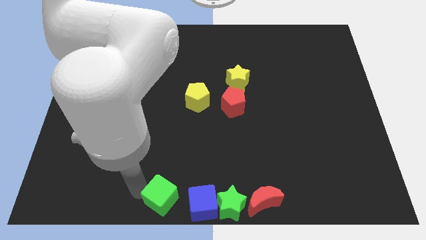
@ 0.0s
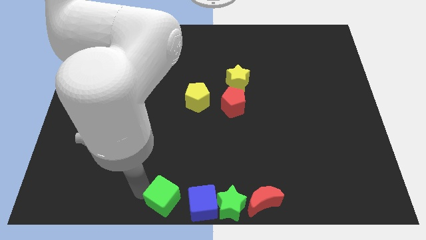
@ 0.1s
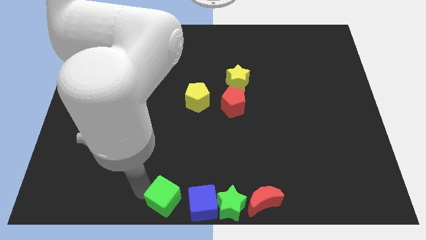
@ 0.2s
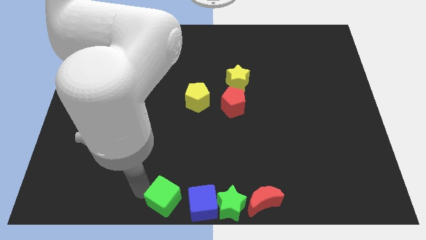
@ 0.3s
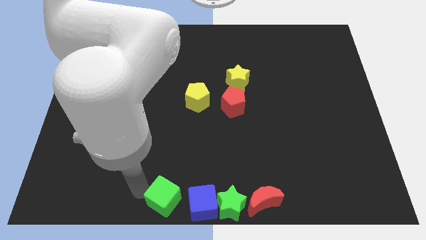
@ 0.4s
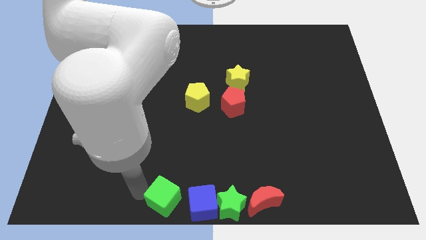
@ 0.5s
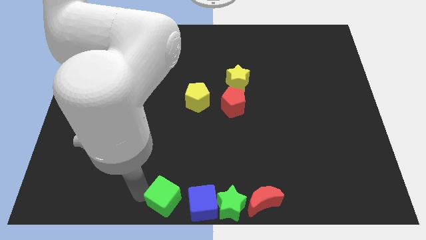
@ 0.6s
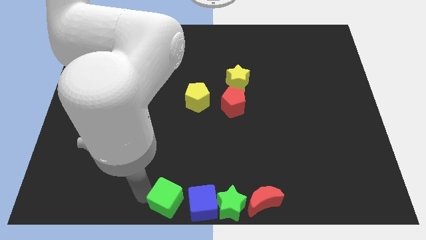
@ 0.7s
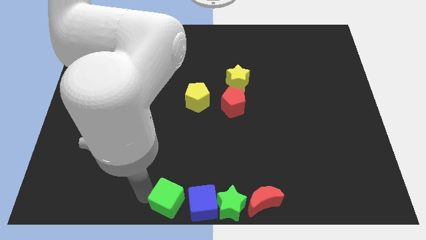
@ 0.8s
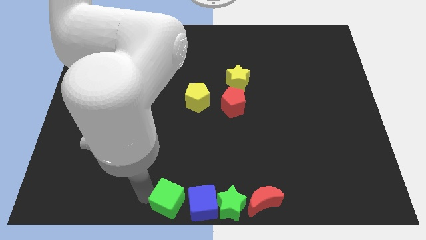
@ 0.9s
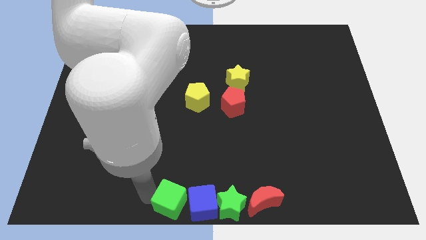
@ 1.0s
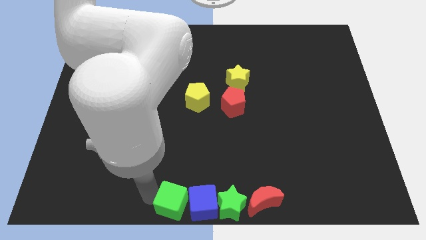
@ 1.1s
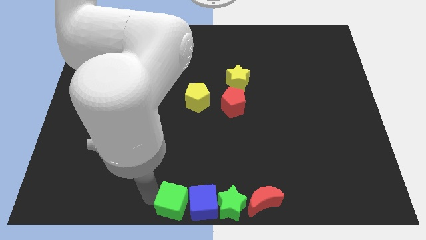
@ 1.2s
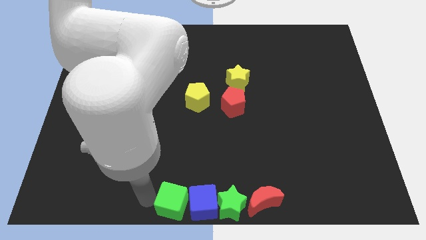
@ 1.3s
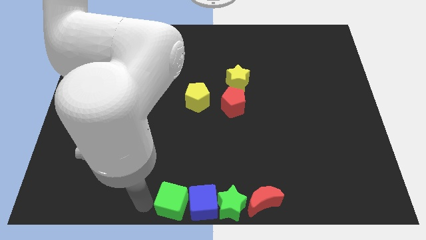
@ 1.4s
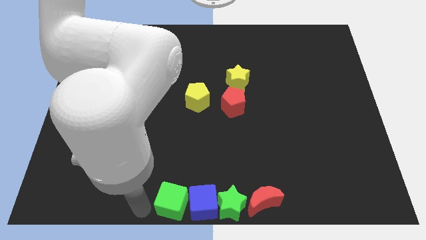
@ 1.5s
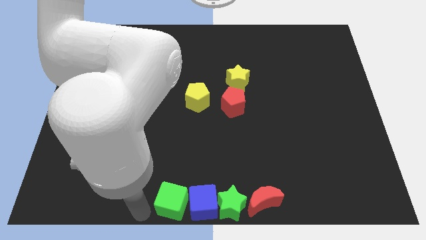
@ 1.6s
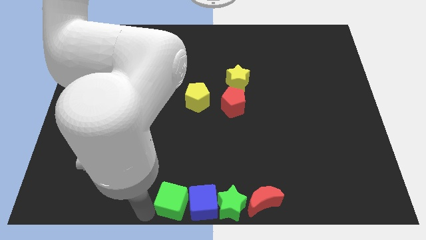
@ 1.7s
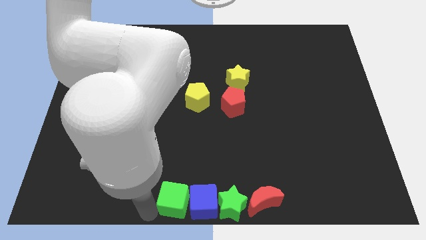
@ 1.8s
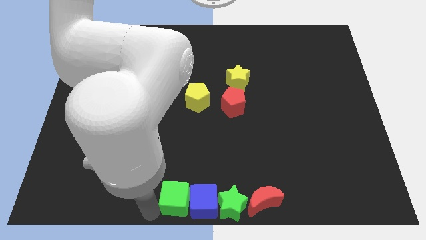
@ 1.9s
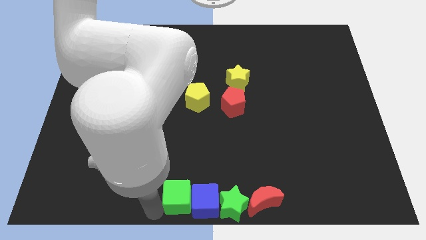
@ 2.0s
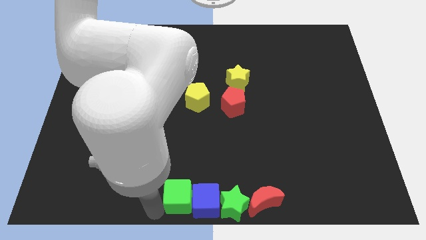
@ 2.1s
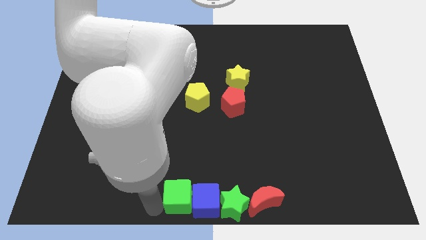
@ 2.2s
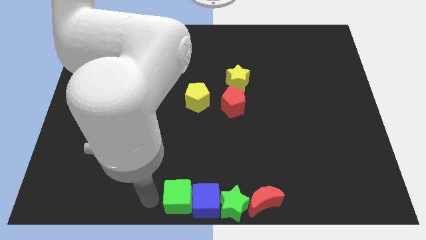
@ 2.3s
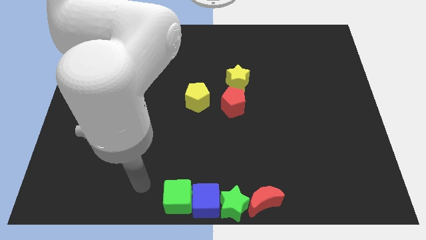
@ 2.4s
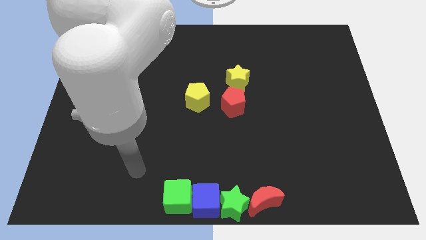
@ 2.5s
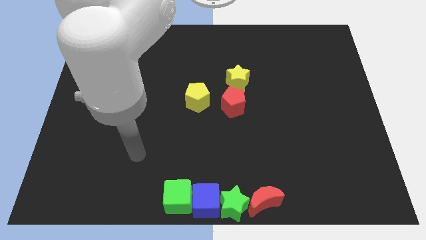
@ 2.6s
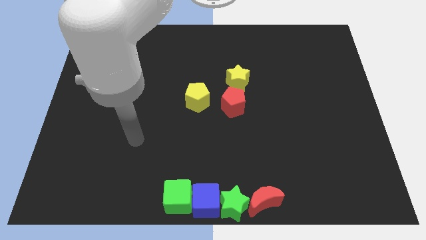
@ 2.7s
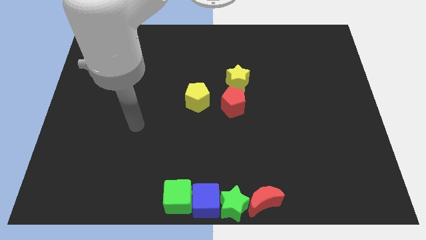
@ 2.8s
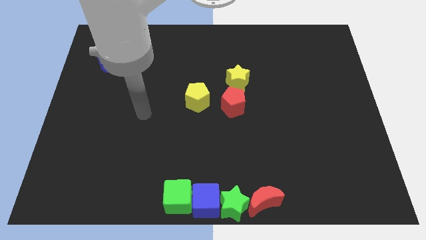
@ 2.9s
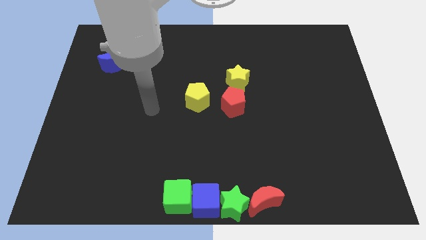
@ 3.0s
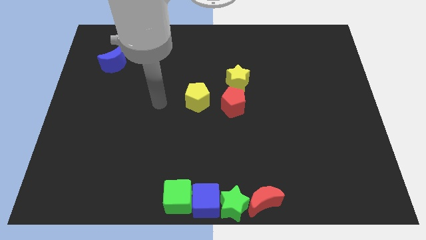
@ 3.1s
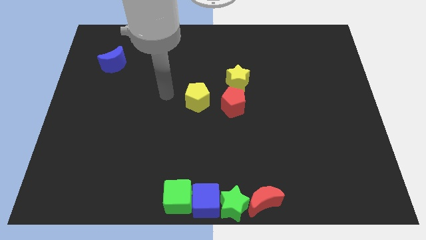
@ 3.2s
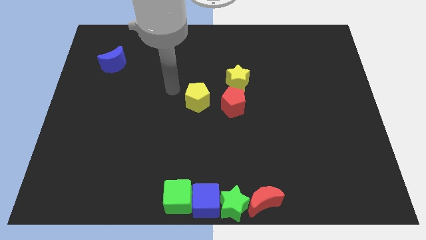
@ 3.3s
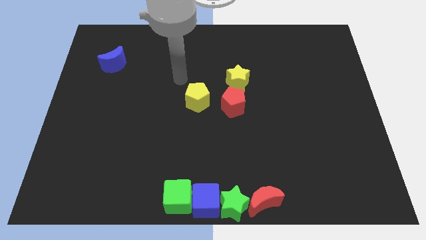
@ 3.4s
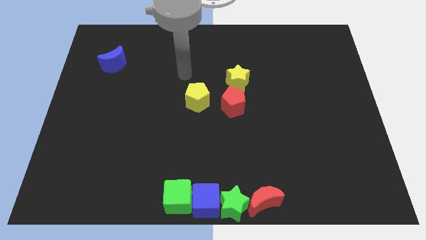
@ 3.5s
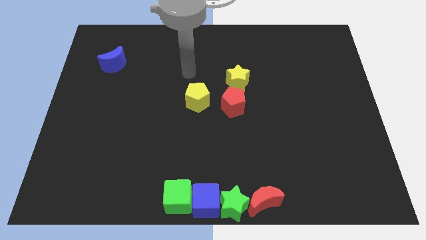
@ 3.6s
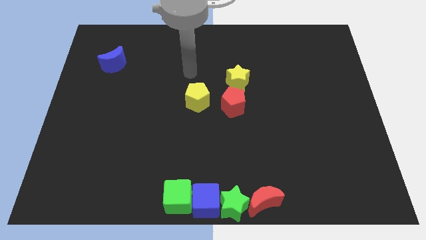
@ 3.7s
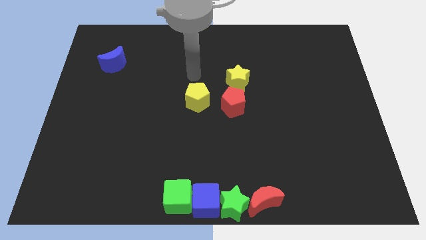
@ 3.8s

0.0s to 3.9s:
move the arm from the green cube to the top of the yellow pentagon

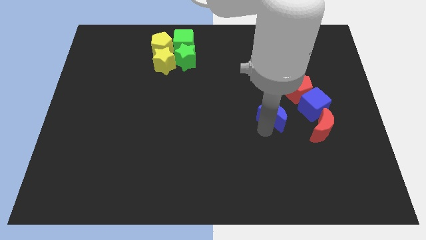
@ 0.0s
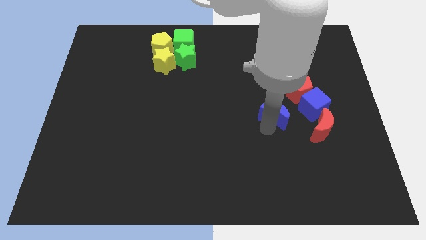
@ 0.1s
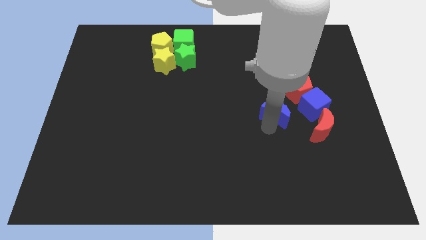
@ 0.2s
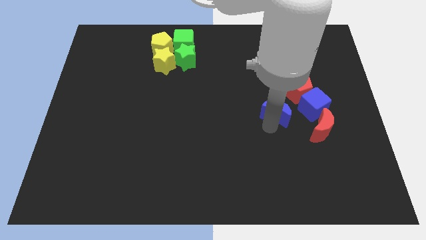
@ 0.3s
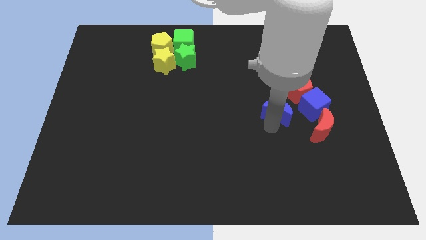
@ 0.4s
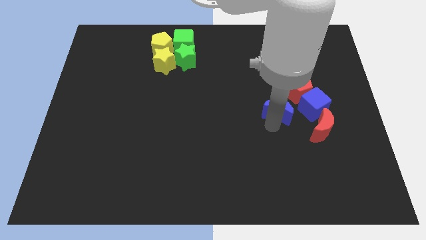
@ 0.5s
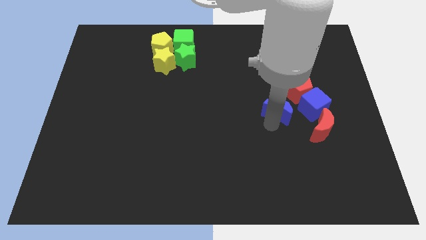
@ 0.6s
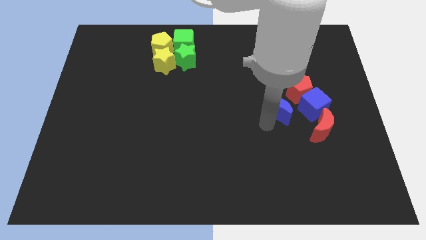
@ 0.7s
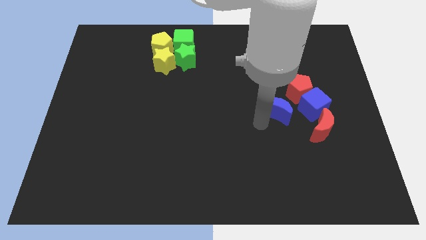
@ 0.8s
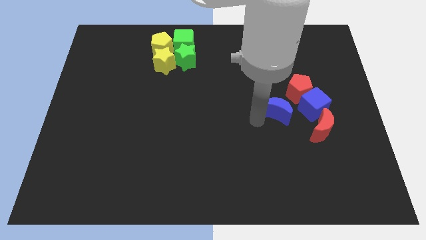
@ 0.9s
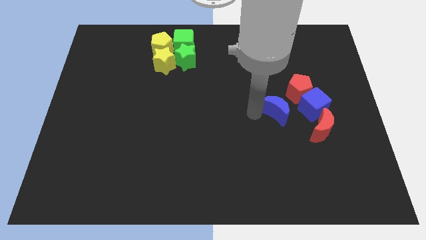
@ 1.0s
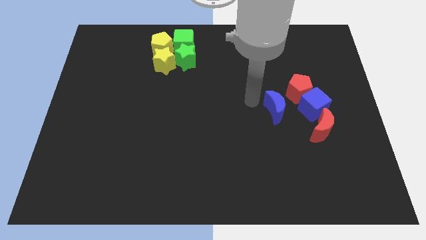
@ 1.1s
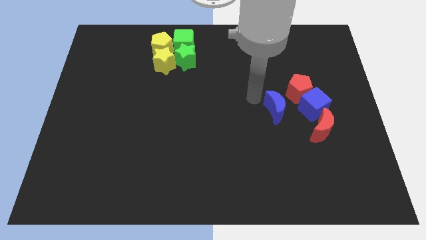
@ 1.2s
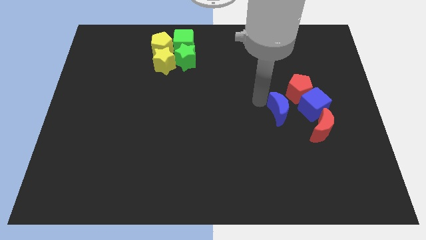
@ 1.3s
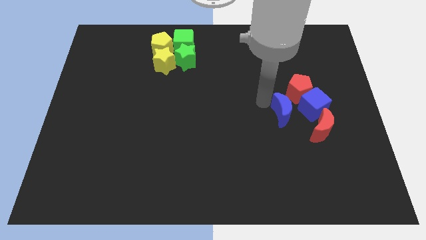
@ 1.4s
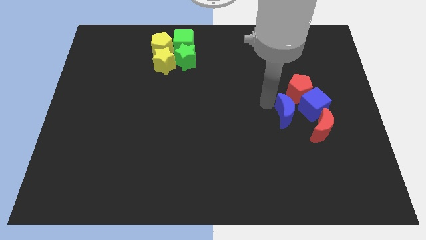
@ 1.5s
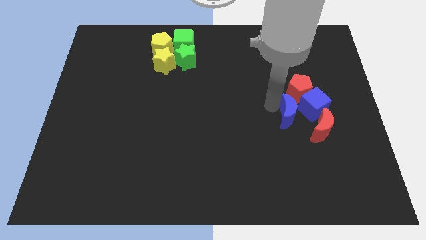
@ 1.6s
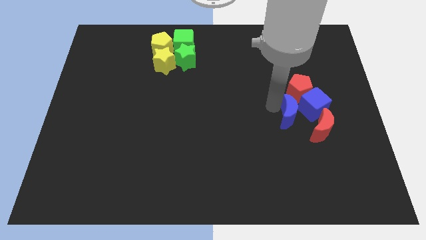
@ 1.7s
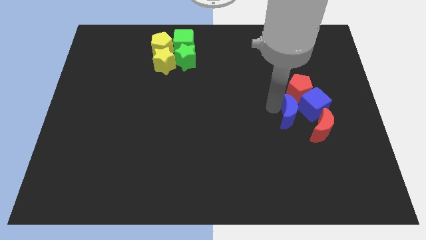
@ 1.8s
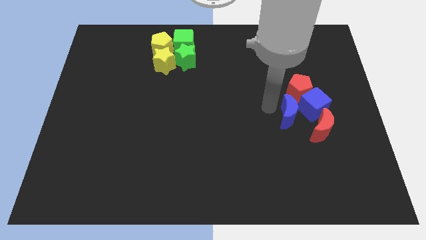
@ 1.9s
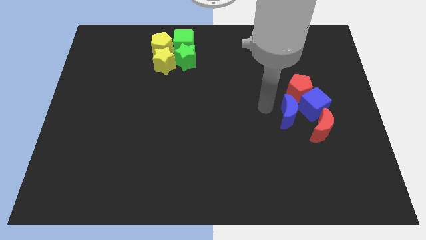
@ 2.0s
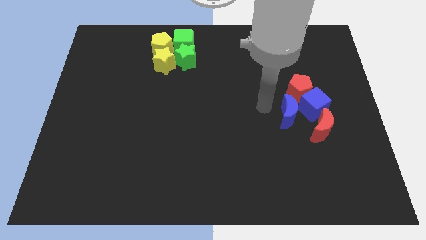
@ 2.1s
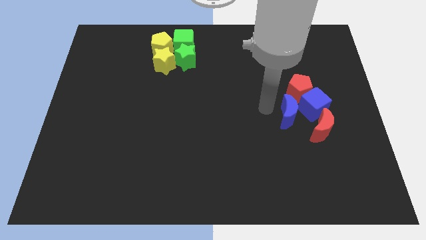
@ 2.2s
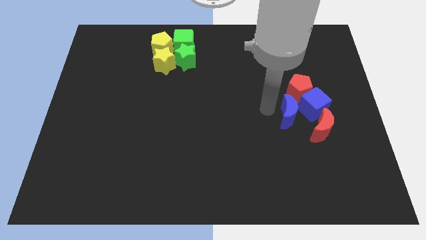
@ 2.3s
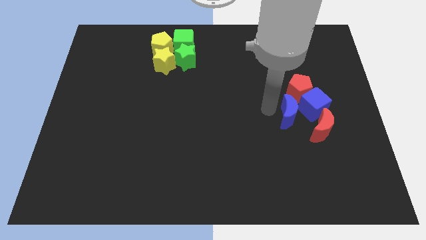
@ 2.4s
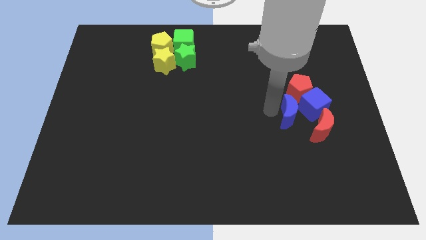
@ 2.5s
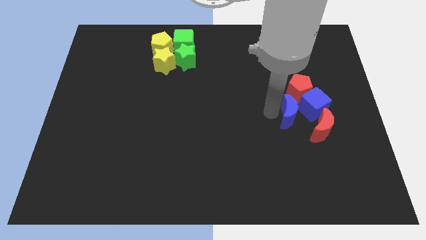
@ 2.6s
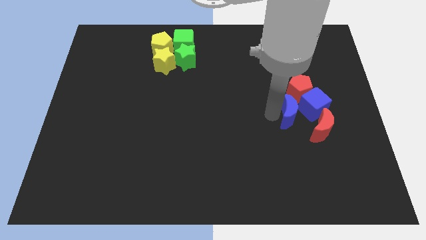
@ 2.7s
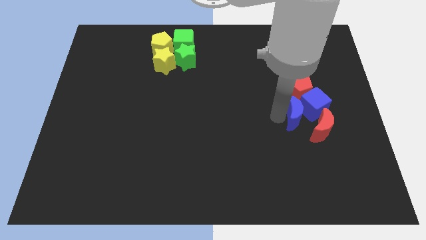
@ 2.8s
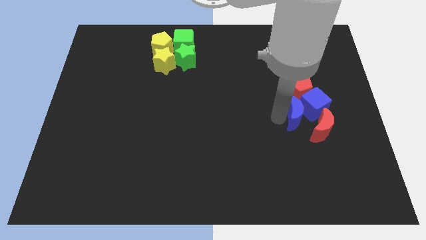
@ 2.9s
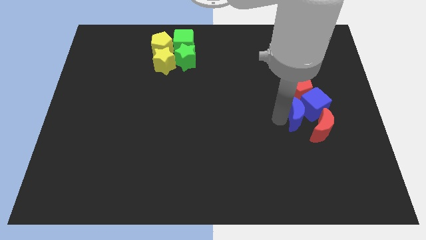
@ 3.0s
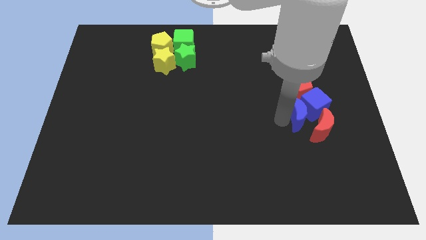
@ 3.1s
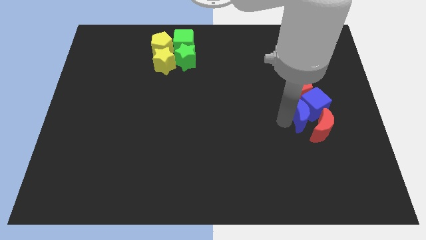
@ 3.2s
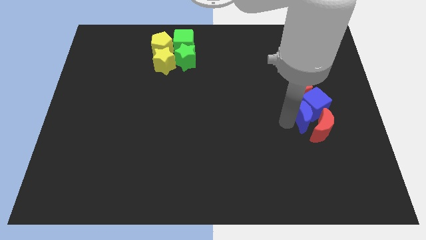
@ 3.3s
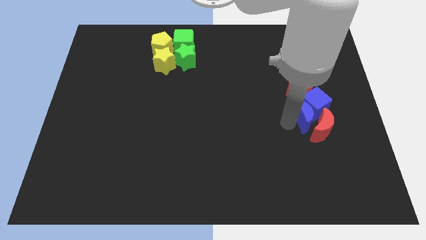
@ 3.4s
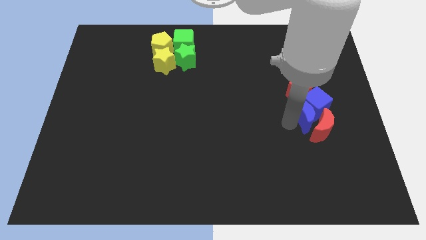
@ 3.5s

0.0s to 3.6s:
push the blue moon into blue cube

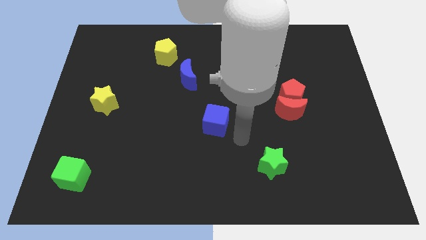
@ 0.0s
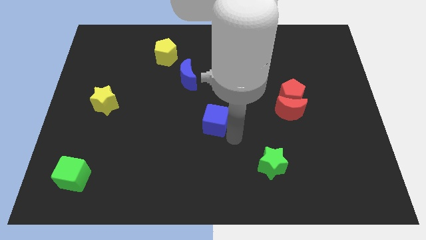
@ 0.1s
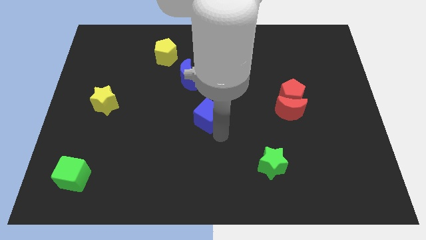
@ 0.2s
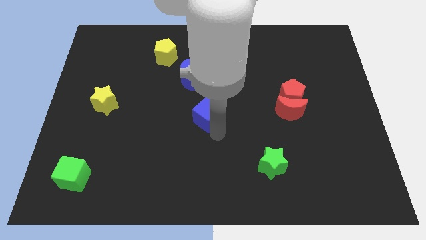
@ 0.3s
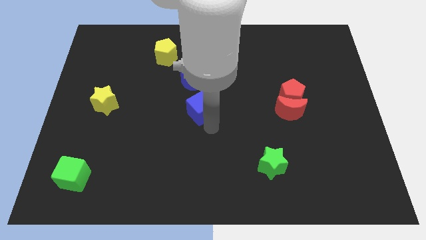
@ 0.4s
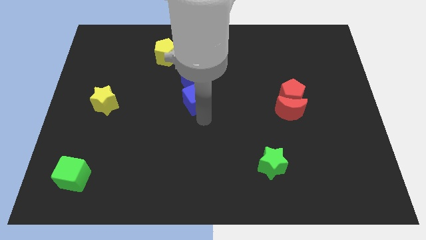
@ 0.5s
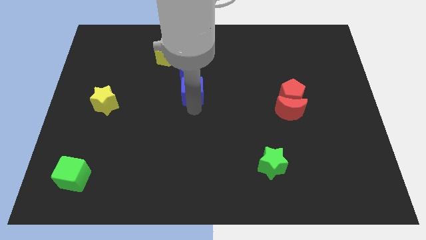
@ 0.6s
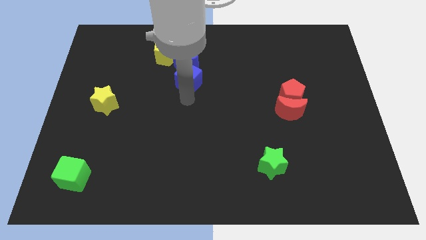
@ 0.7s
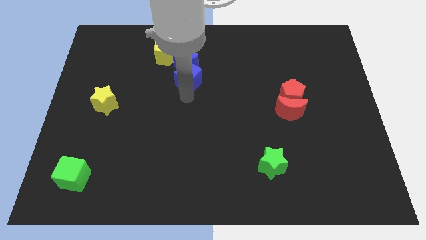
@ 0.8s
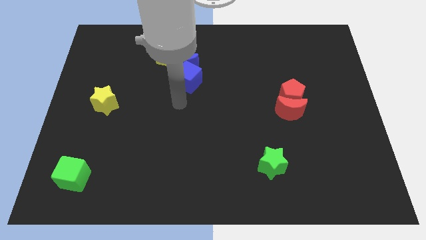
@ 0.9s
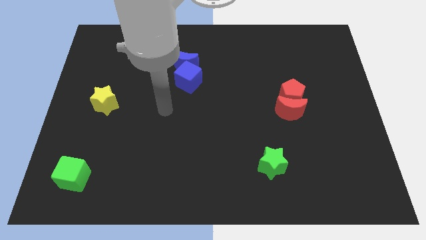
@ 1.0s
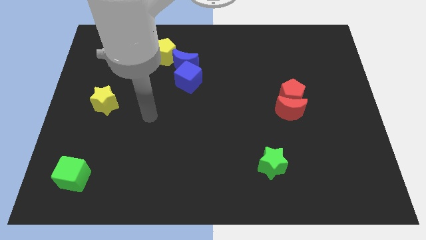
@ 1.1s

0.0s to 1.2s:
push the blue cube into the blue crescent

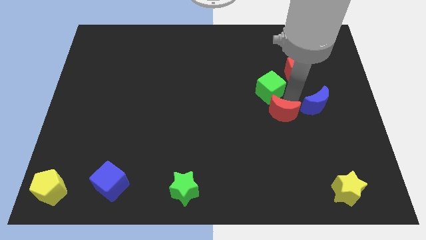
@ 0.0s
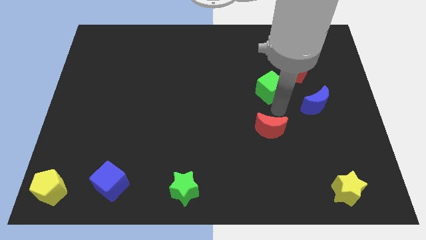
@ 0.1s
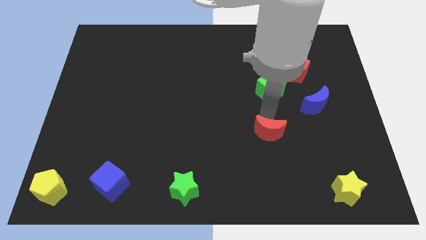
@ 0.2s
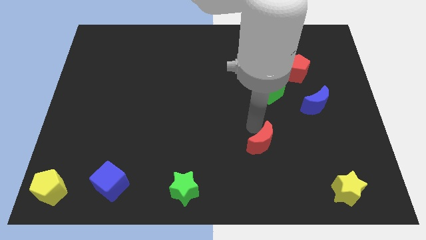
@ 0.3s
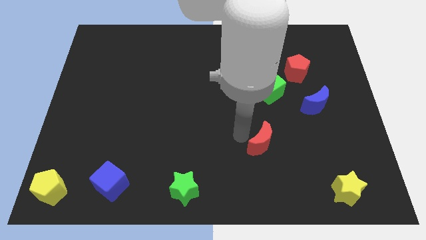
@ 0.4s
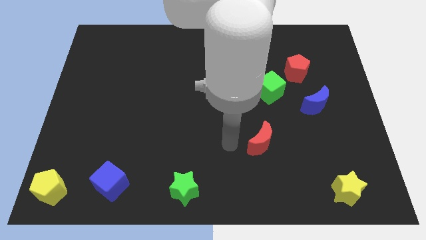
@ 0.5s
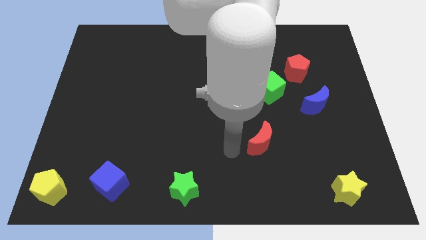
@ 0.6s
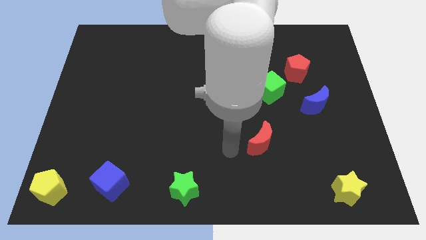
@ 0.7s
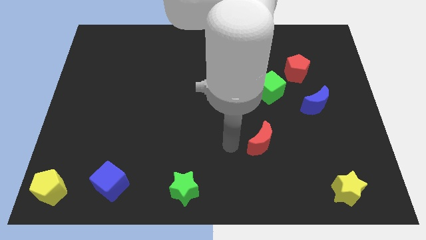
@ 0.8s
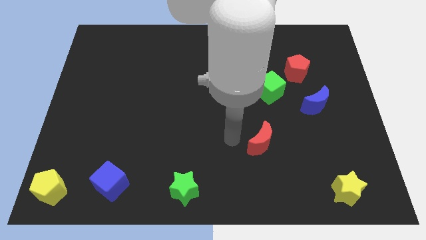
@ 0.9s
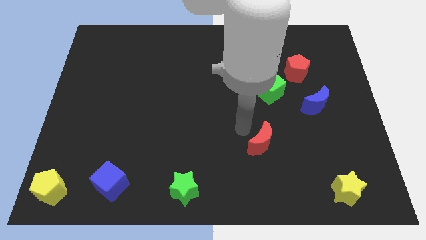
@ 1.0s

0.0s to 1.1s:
place red moon diagonal to green star
